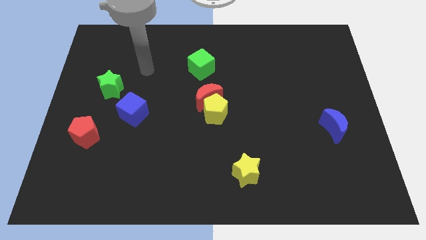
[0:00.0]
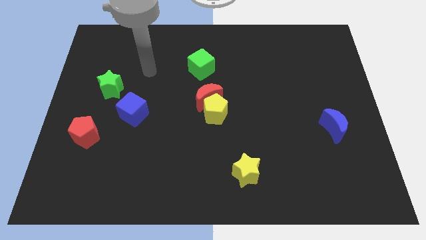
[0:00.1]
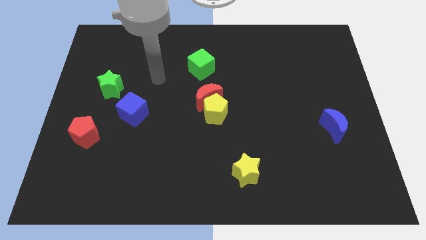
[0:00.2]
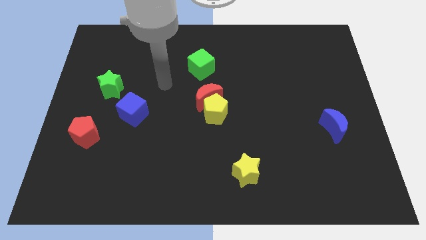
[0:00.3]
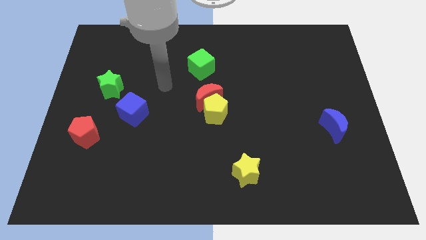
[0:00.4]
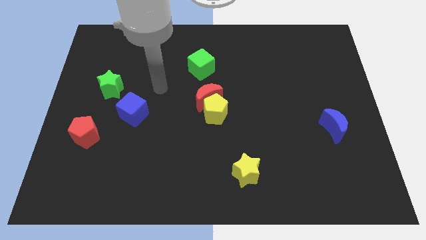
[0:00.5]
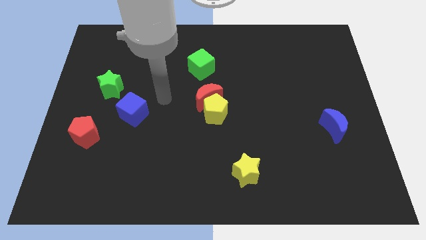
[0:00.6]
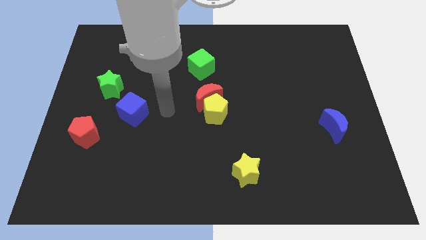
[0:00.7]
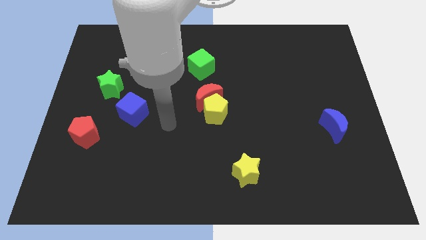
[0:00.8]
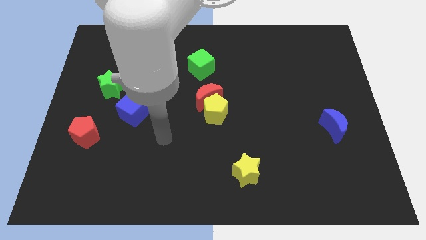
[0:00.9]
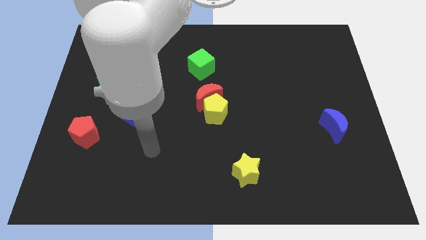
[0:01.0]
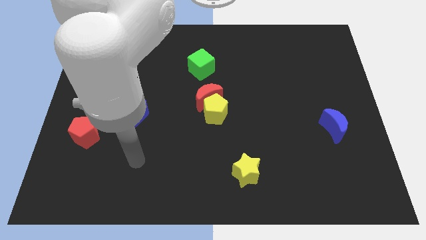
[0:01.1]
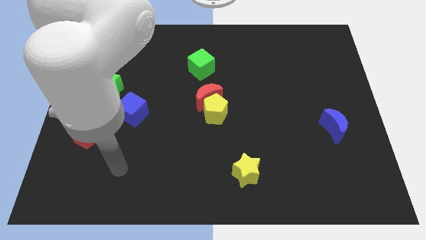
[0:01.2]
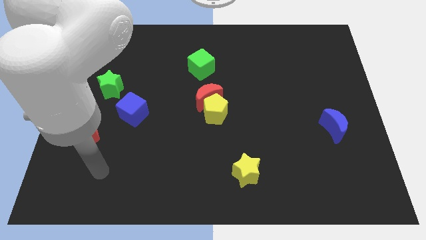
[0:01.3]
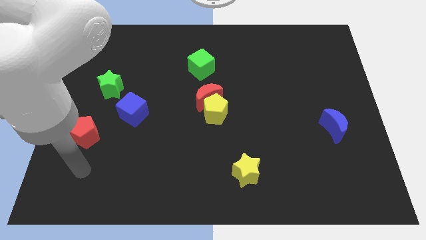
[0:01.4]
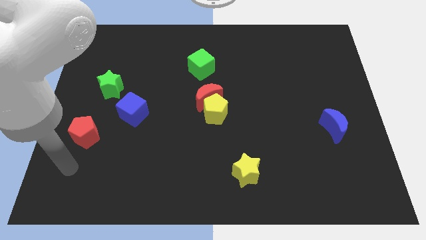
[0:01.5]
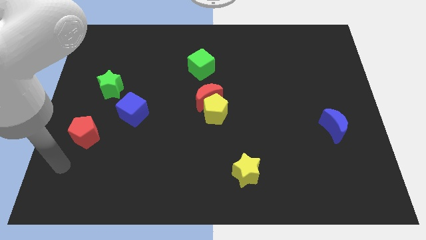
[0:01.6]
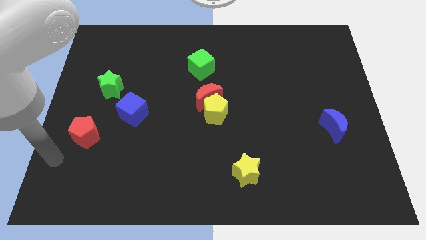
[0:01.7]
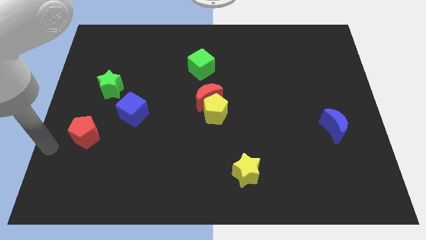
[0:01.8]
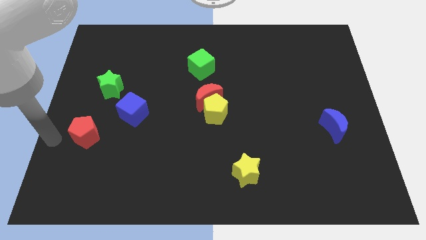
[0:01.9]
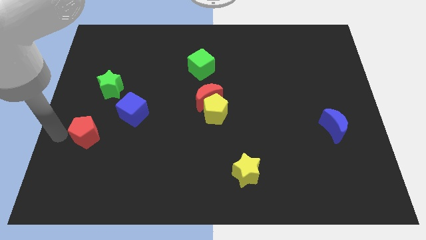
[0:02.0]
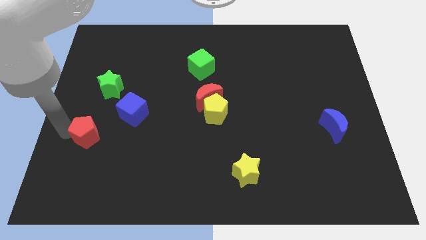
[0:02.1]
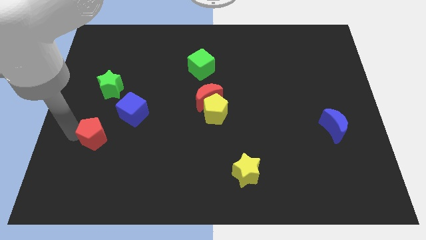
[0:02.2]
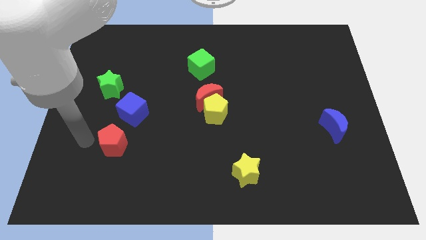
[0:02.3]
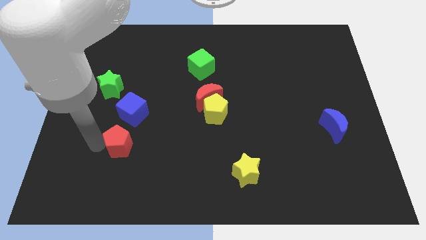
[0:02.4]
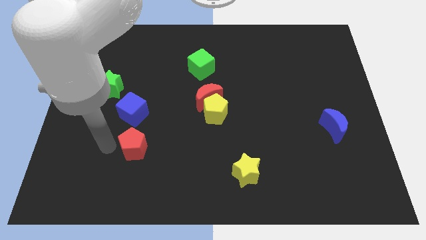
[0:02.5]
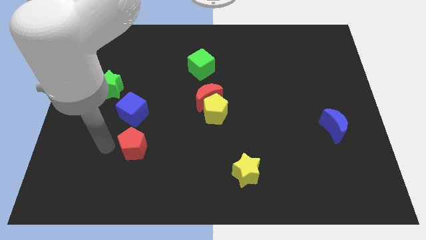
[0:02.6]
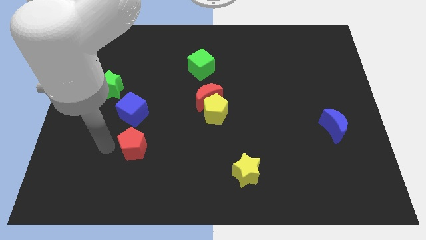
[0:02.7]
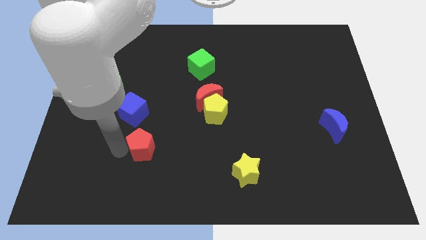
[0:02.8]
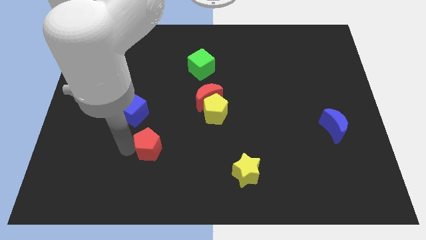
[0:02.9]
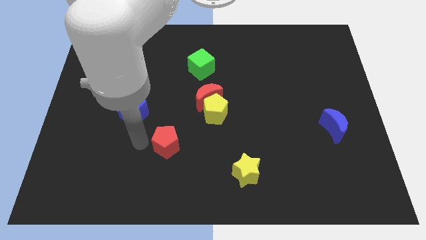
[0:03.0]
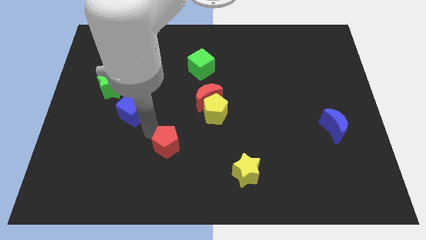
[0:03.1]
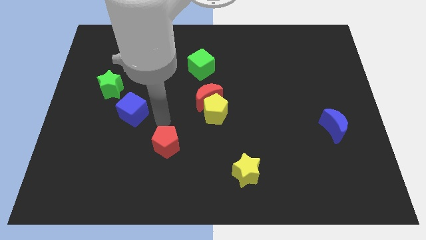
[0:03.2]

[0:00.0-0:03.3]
slide the red pentagon to the right side of the table

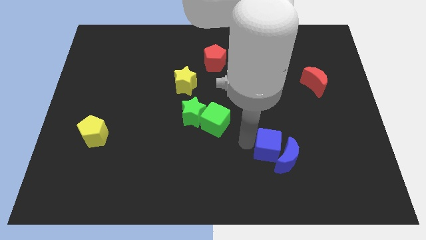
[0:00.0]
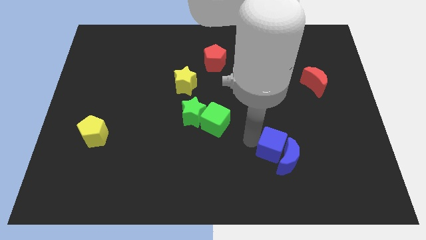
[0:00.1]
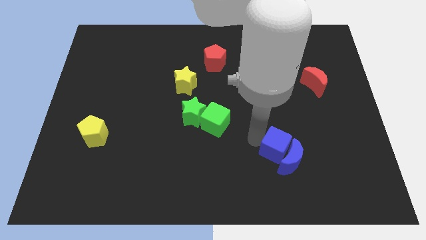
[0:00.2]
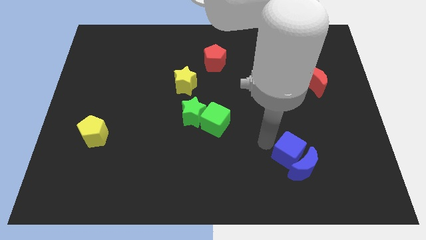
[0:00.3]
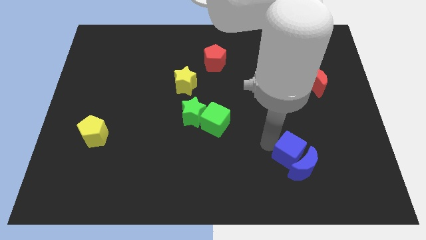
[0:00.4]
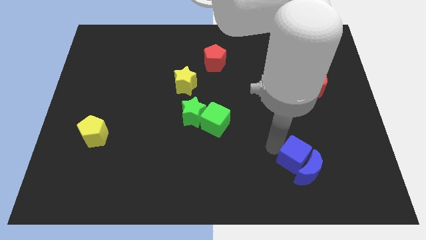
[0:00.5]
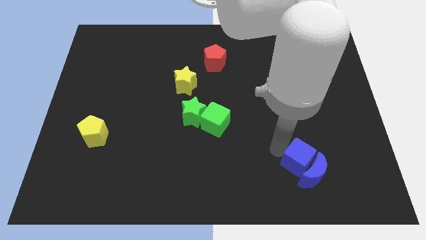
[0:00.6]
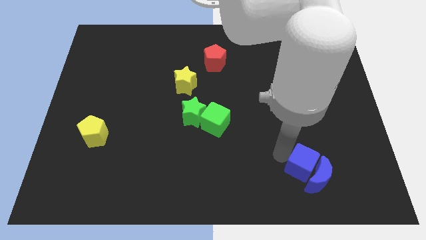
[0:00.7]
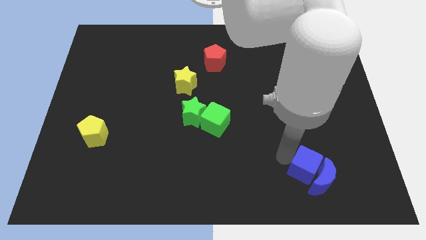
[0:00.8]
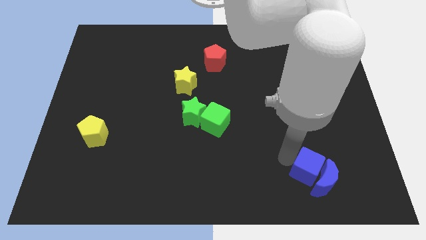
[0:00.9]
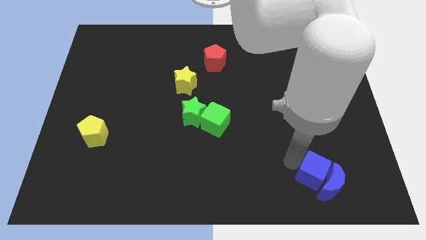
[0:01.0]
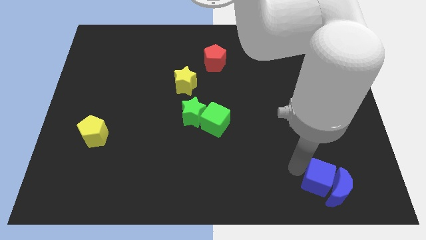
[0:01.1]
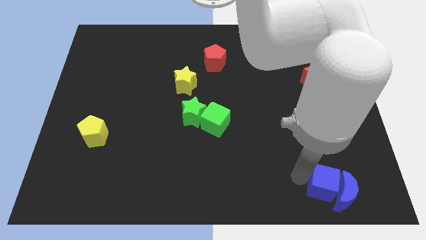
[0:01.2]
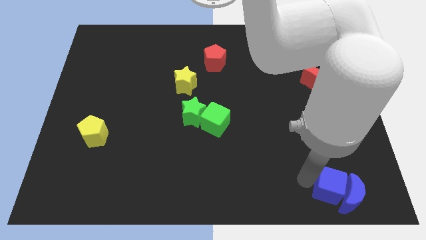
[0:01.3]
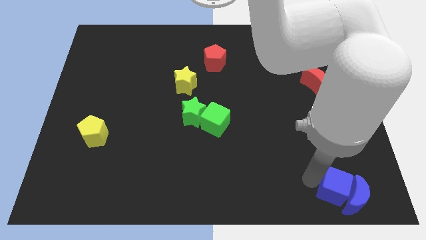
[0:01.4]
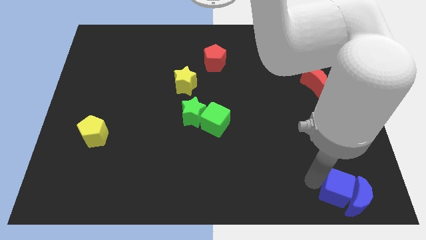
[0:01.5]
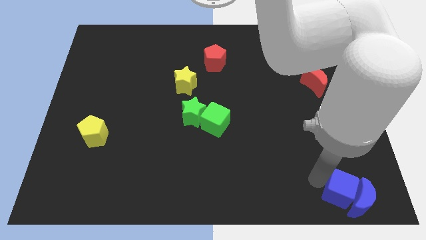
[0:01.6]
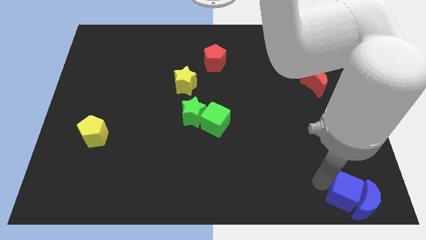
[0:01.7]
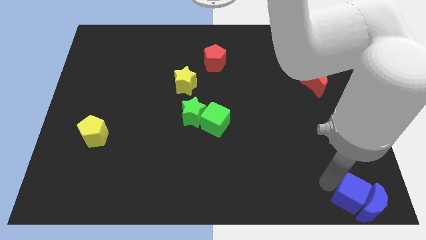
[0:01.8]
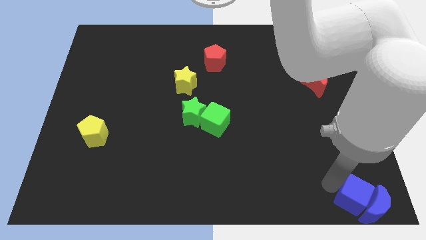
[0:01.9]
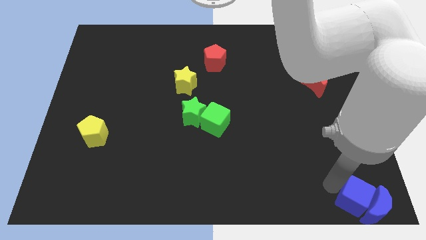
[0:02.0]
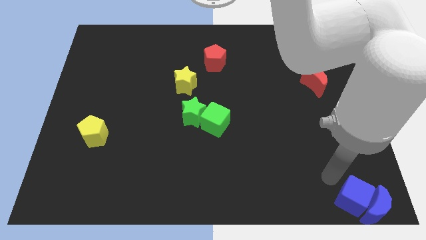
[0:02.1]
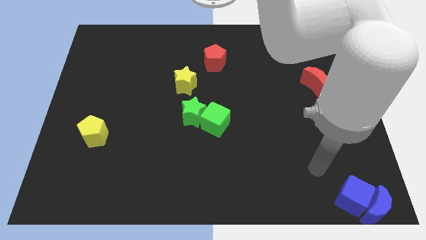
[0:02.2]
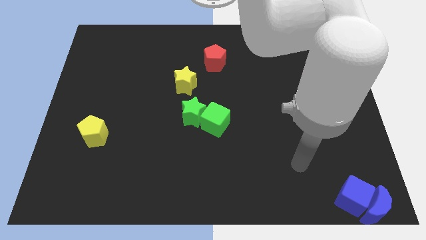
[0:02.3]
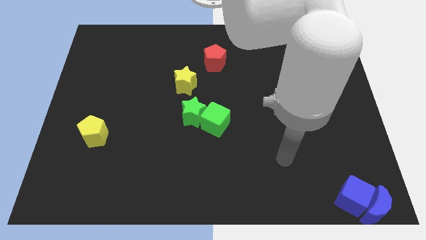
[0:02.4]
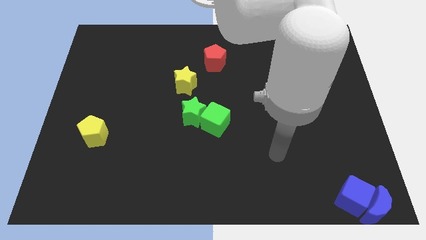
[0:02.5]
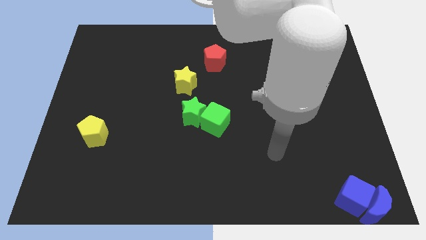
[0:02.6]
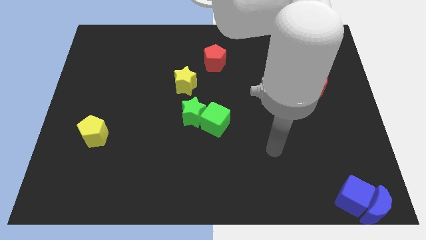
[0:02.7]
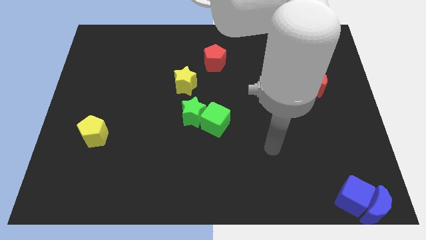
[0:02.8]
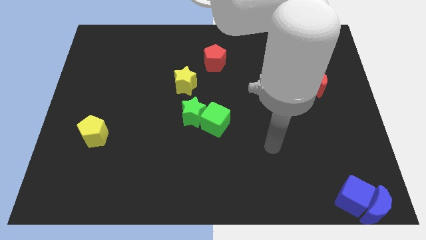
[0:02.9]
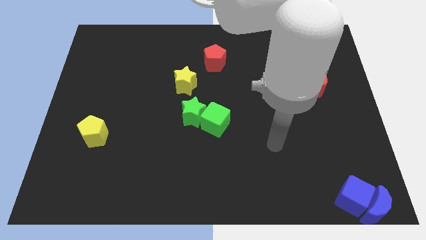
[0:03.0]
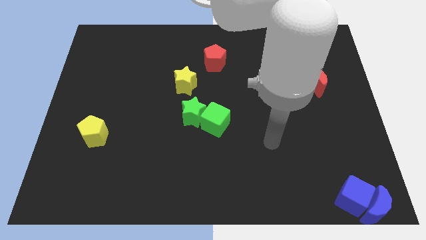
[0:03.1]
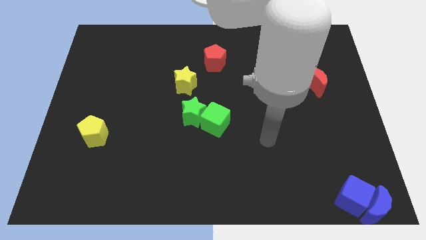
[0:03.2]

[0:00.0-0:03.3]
move the blue crescent and blue cube to the bottom right corner

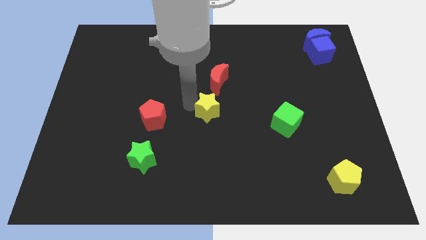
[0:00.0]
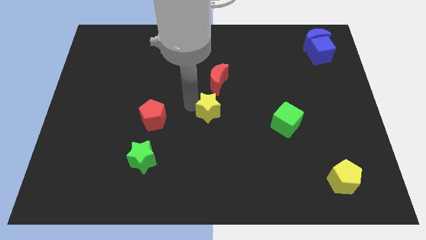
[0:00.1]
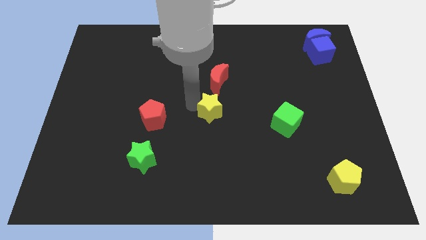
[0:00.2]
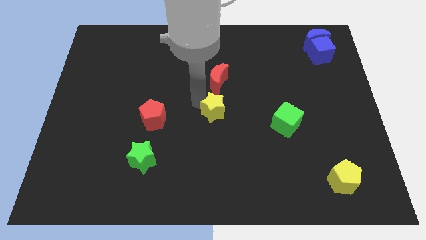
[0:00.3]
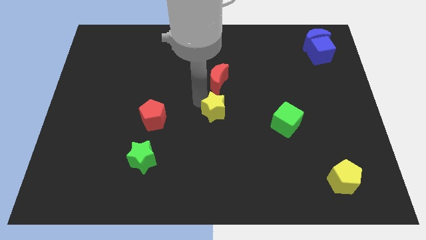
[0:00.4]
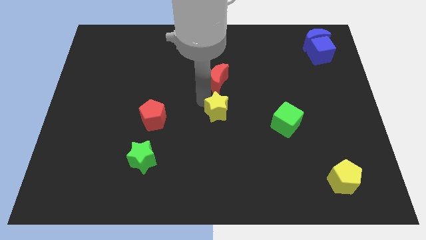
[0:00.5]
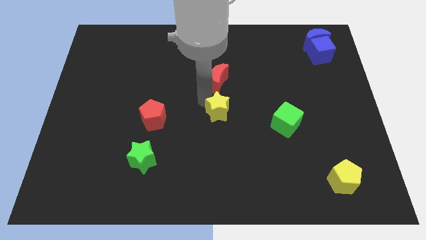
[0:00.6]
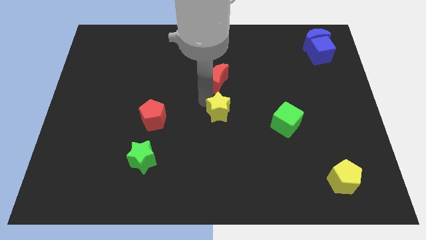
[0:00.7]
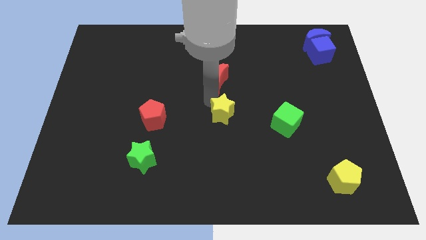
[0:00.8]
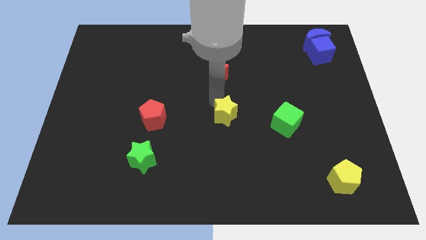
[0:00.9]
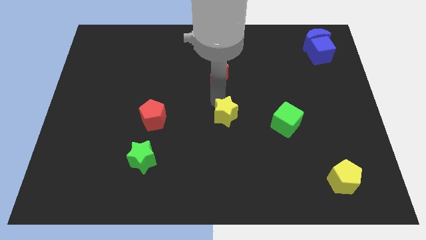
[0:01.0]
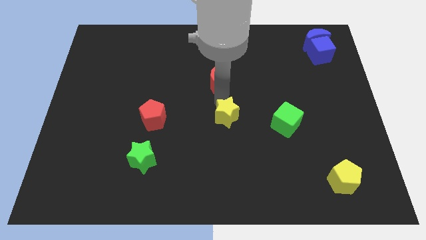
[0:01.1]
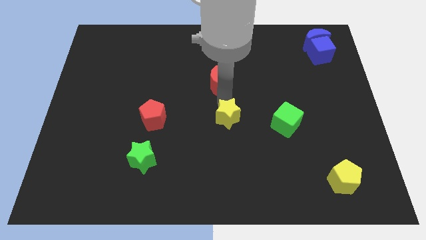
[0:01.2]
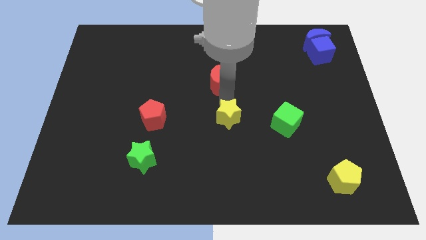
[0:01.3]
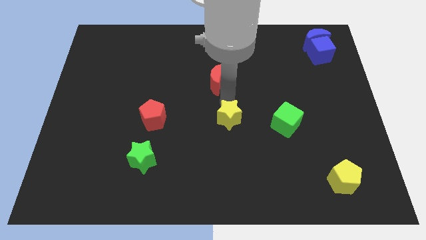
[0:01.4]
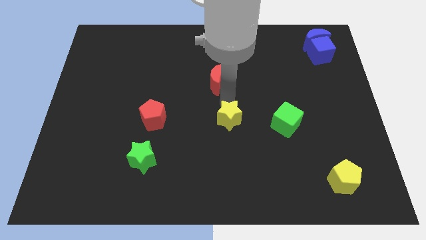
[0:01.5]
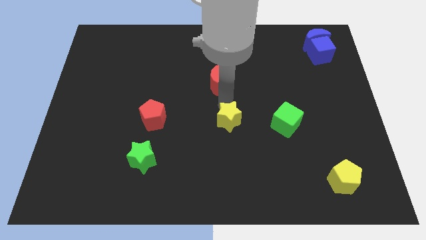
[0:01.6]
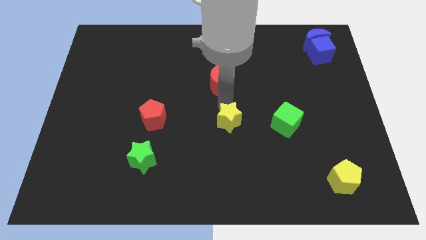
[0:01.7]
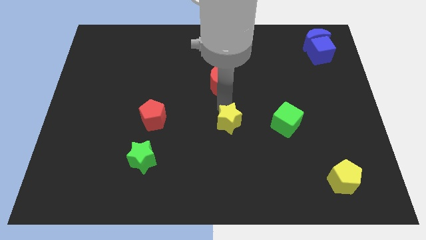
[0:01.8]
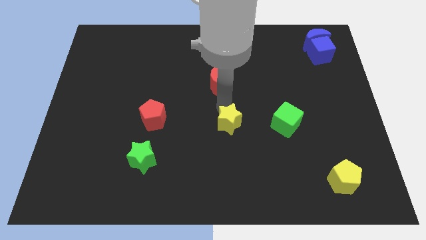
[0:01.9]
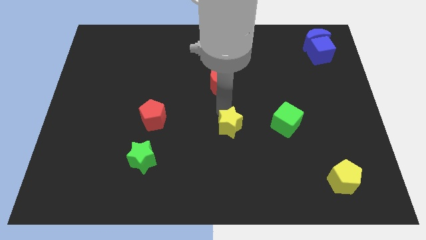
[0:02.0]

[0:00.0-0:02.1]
push the yellow star to the left of the green cube

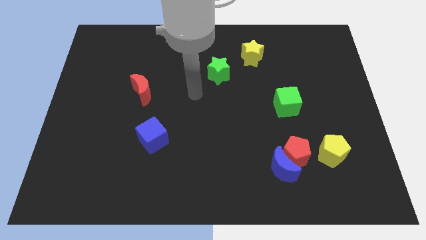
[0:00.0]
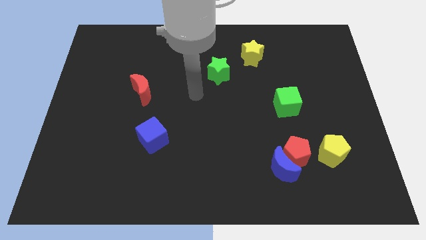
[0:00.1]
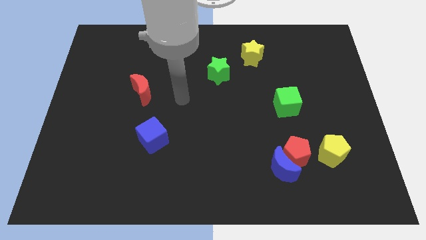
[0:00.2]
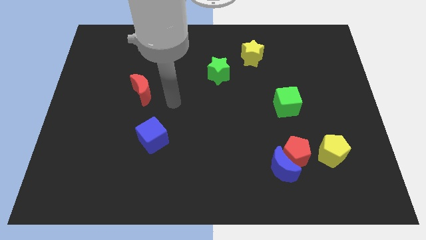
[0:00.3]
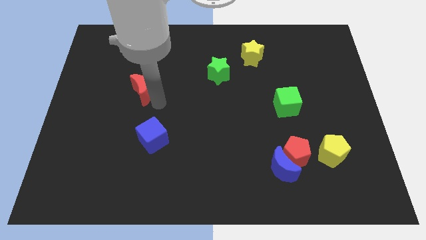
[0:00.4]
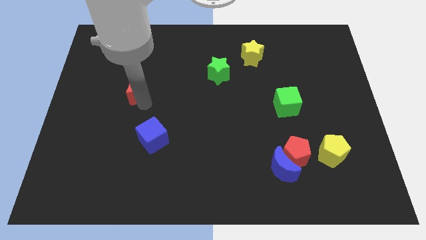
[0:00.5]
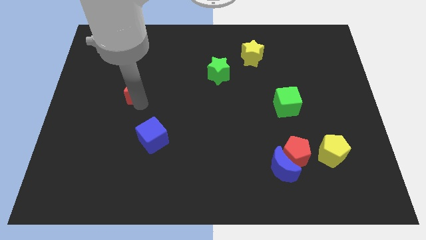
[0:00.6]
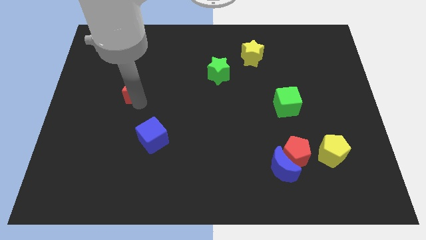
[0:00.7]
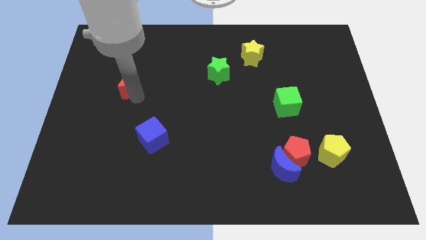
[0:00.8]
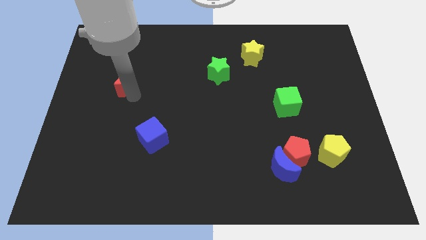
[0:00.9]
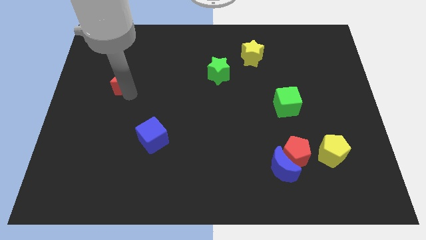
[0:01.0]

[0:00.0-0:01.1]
tap on the bottom side of red moon
